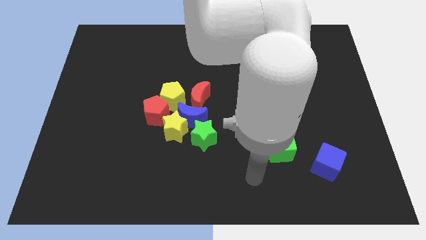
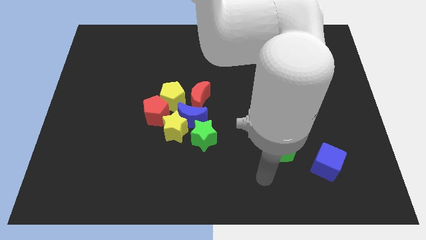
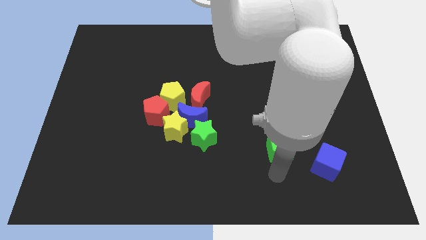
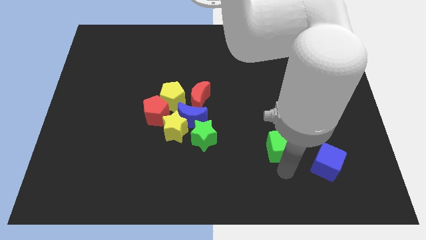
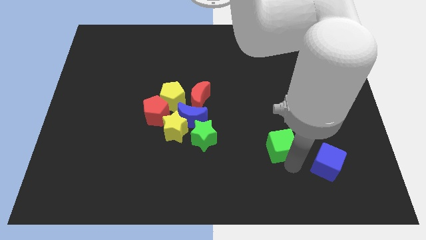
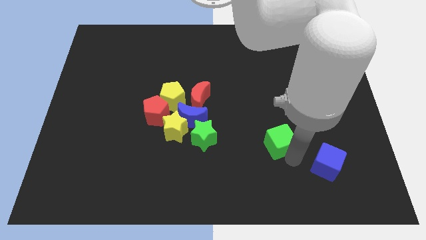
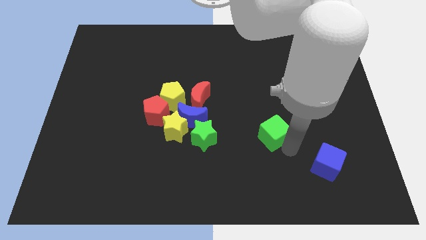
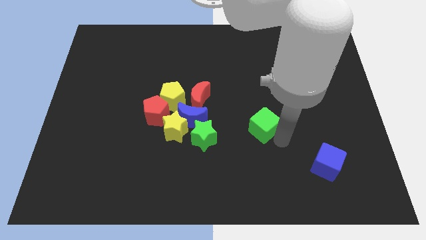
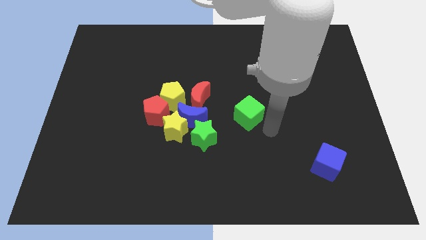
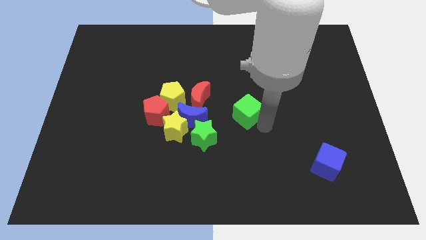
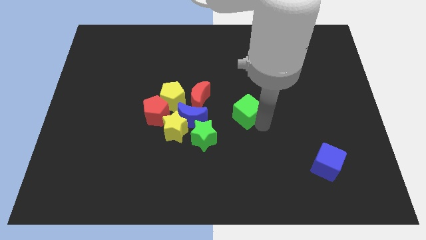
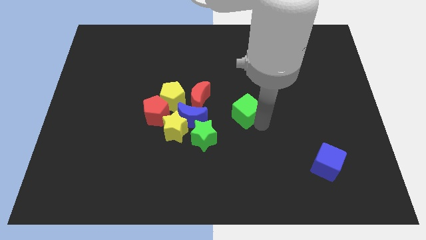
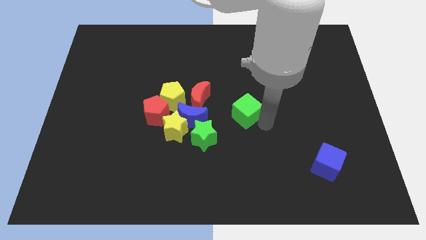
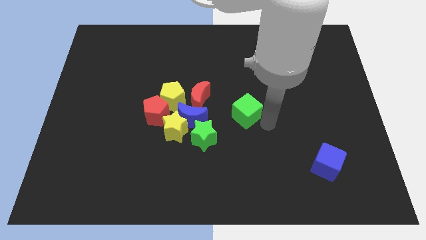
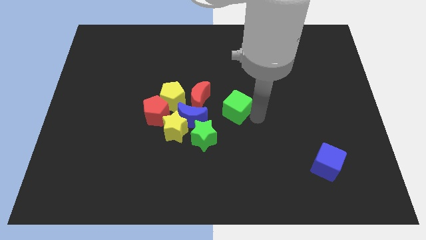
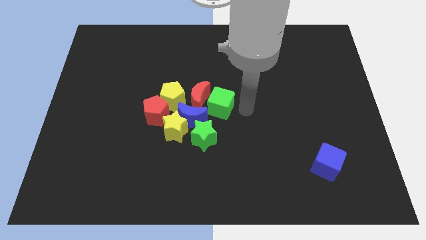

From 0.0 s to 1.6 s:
push the green cube towards the right side of the red moon

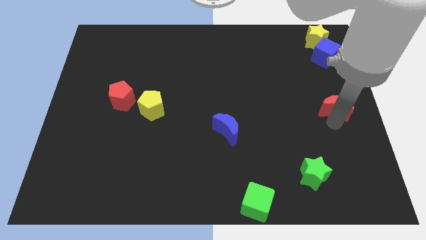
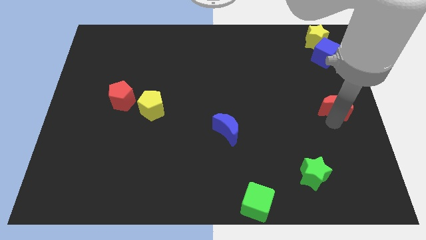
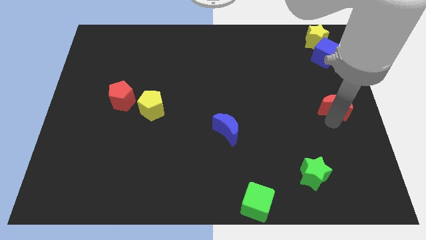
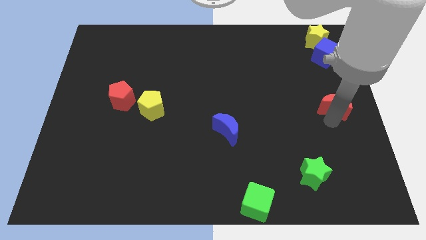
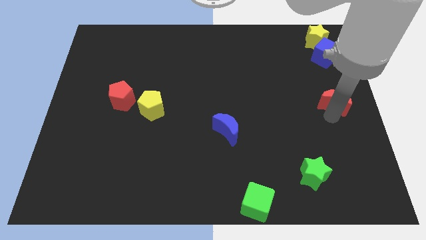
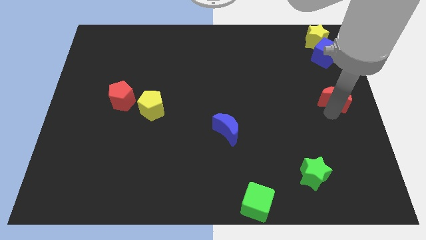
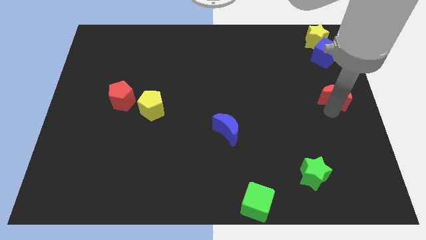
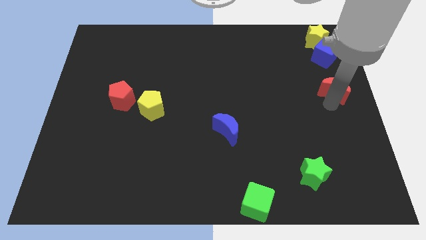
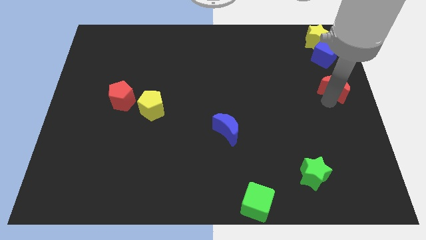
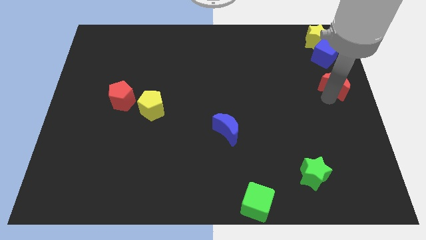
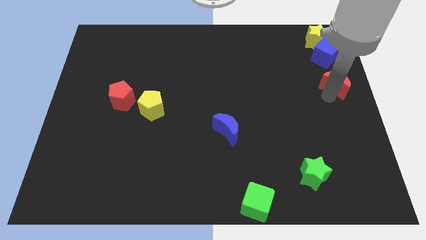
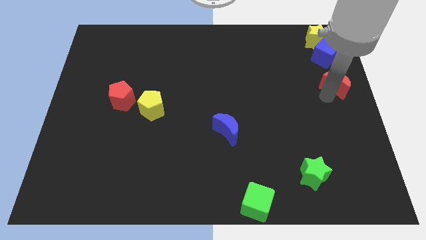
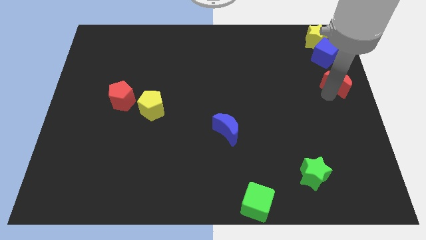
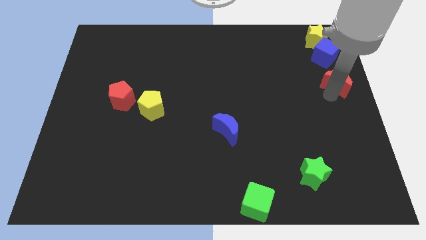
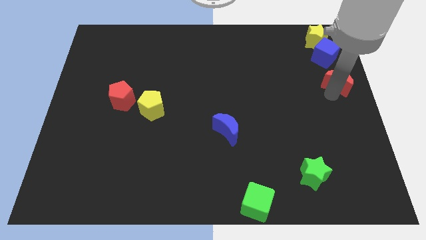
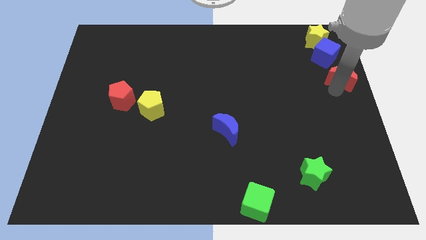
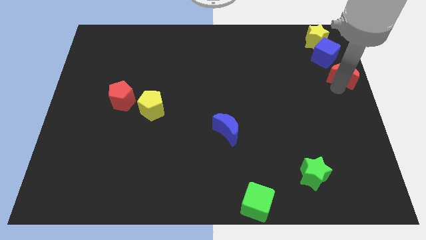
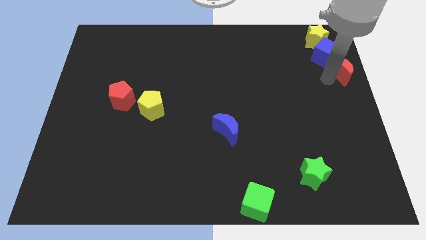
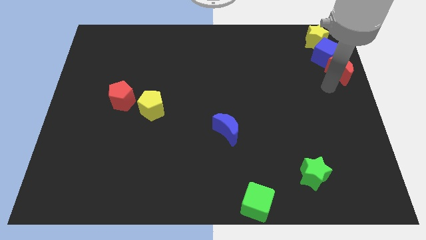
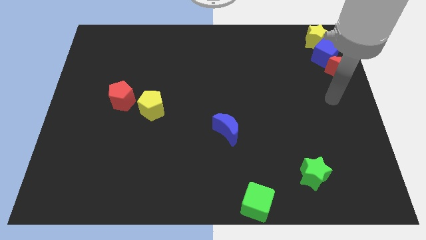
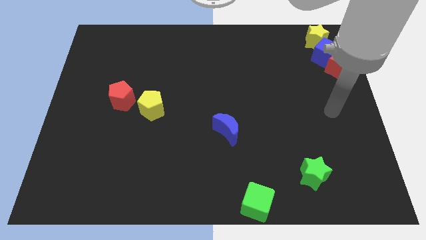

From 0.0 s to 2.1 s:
slide red moon into blue cube

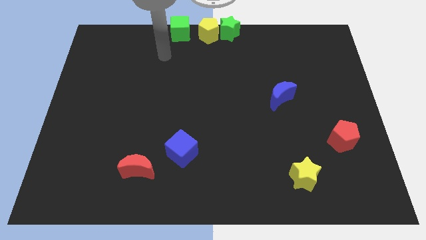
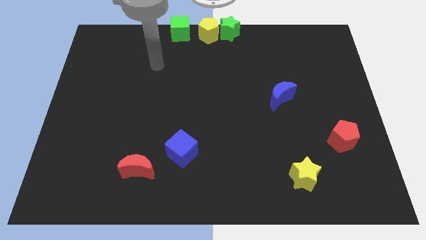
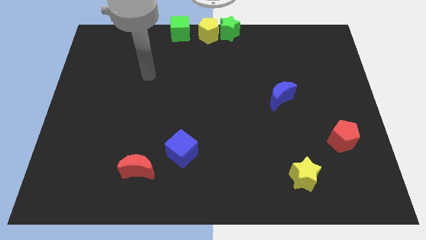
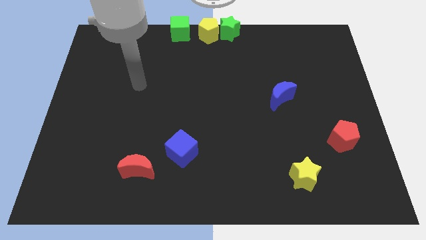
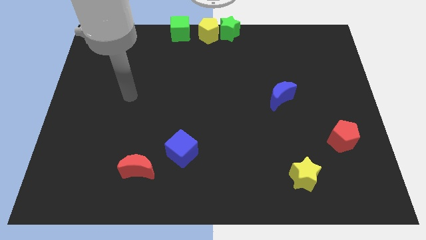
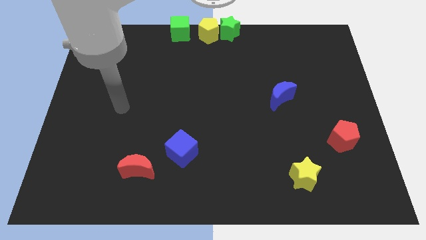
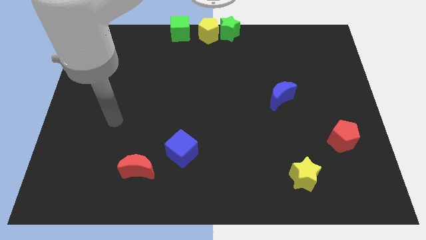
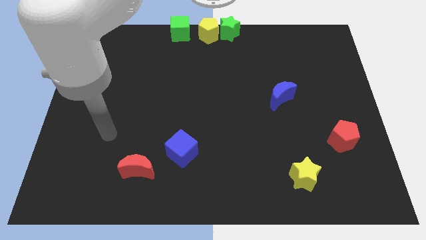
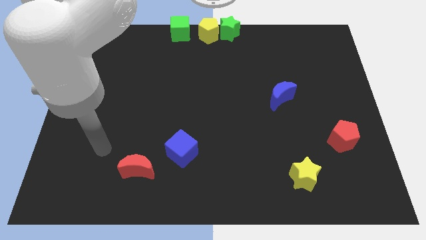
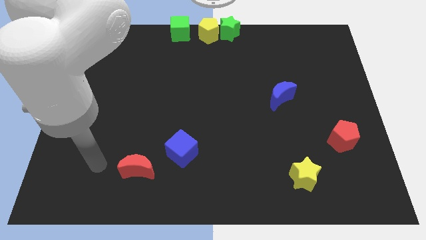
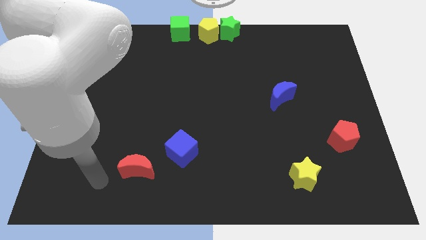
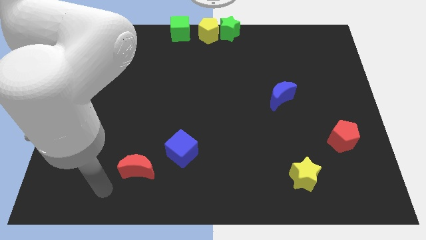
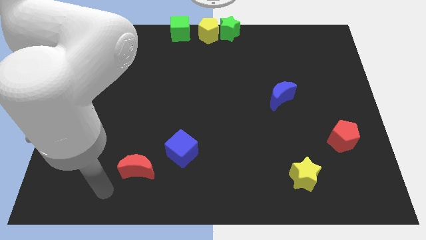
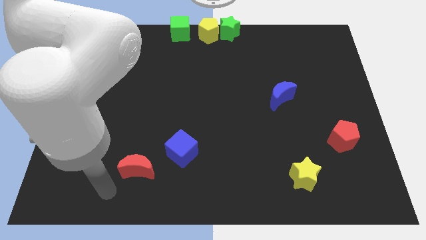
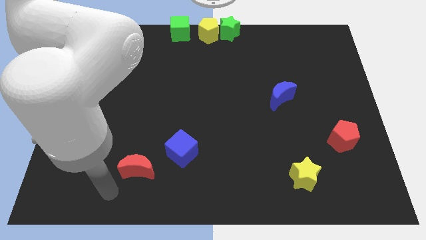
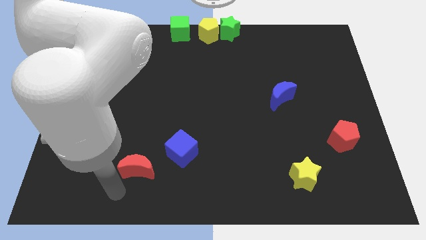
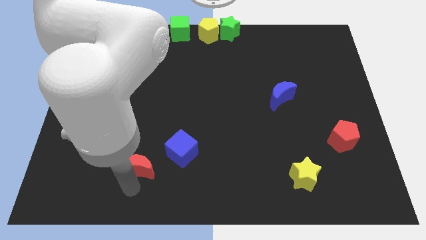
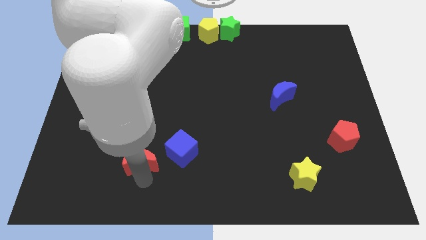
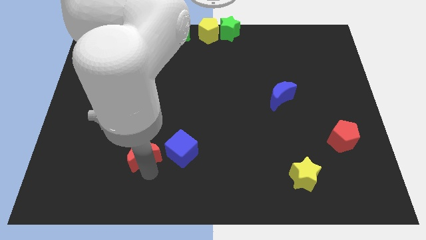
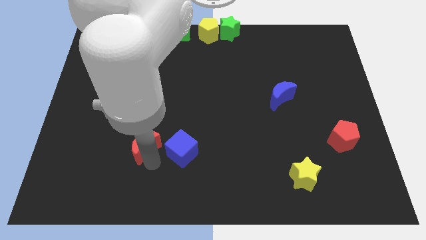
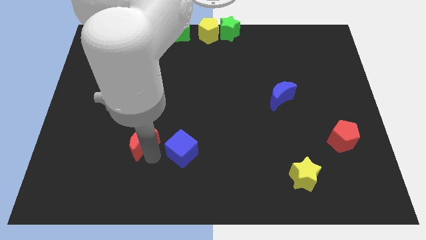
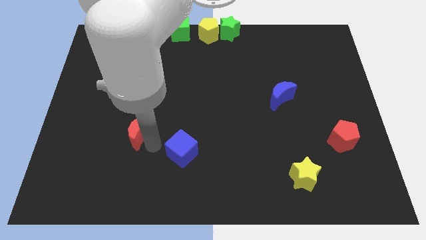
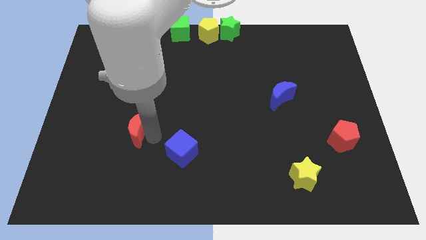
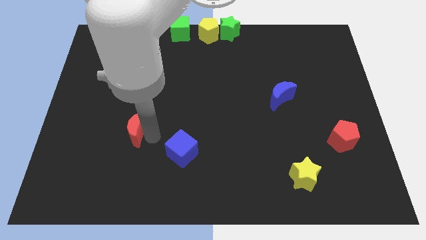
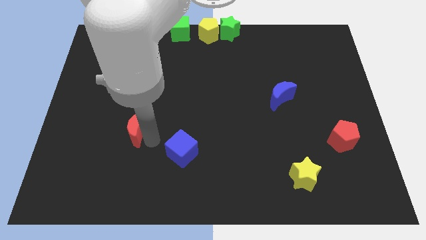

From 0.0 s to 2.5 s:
move red moon slightly upwards

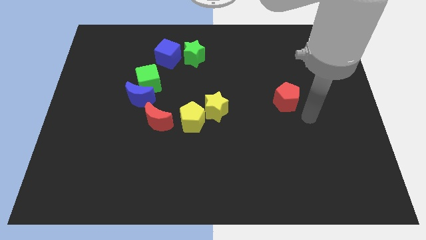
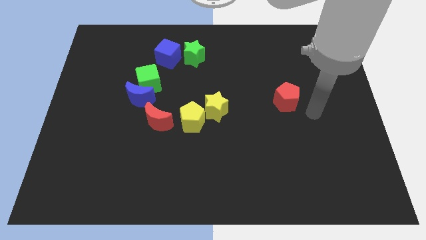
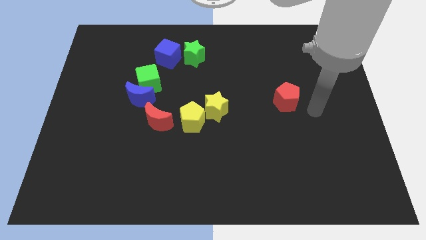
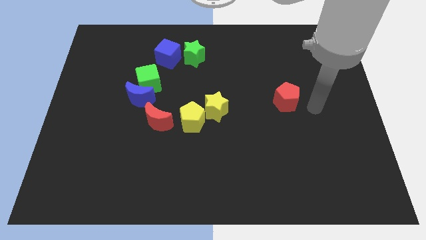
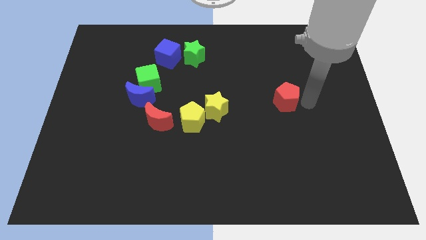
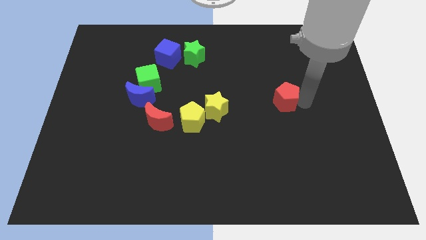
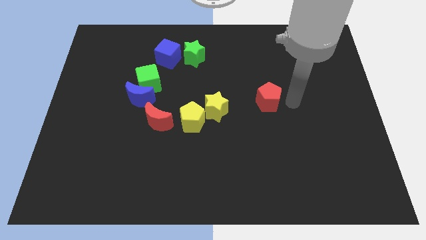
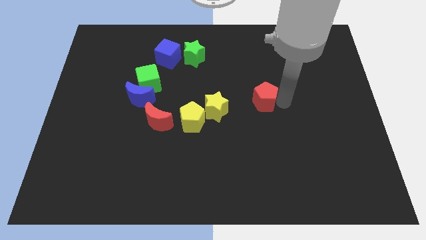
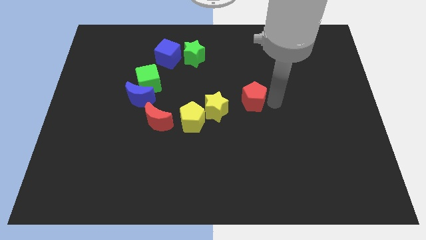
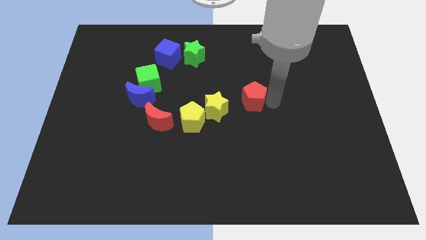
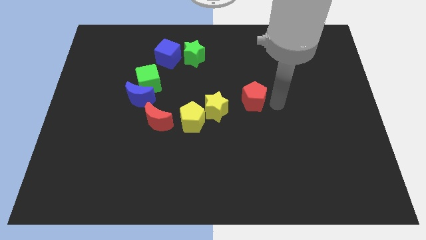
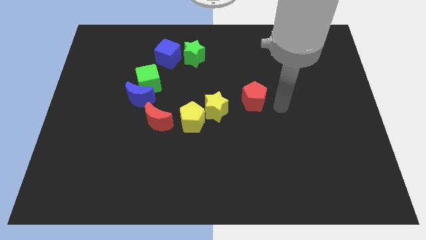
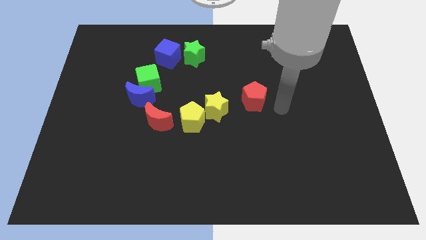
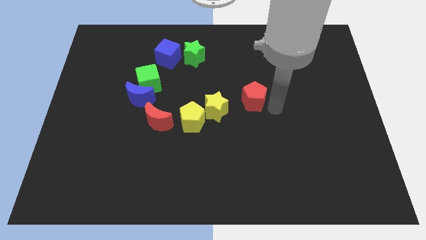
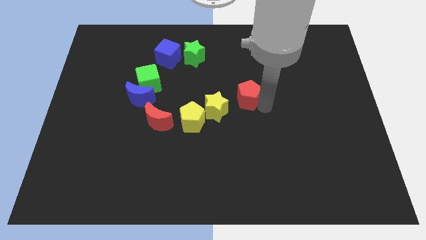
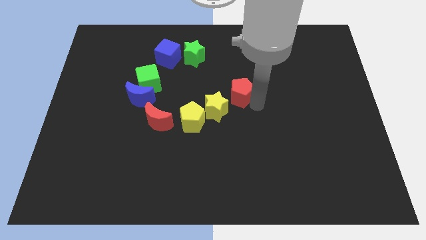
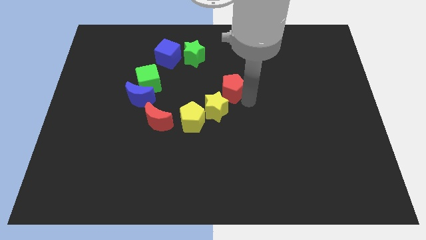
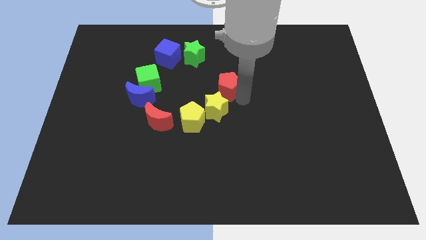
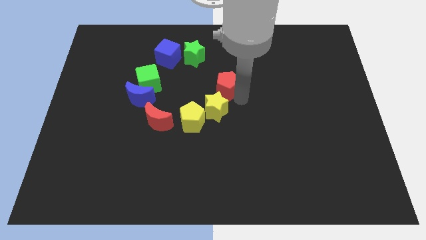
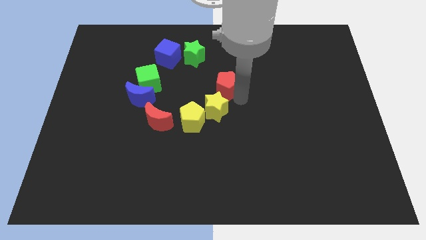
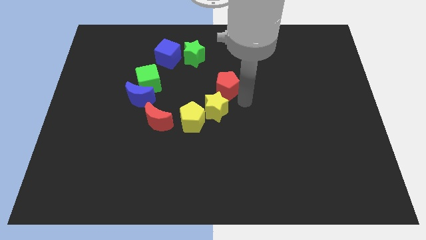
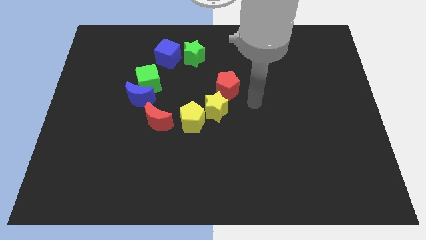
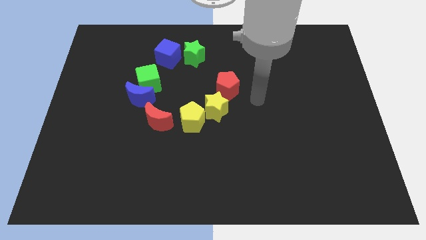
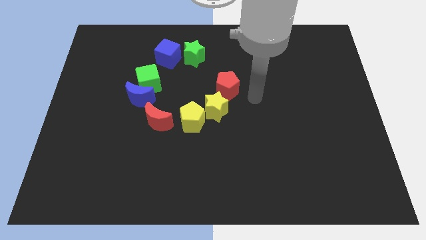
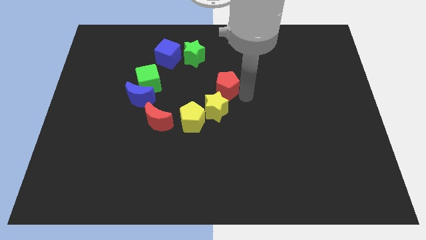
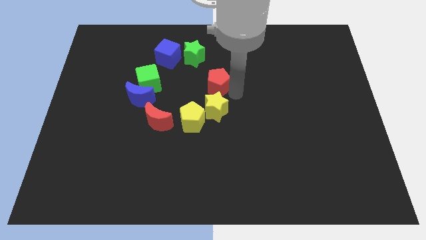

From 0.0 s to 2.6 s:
push the red pentagon to the top of the yellow star
